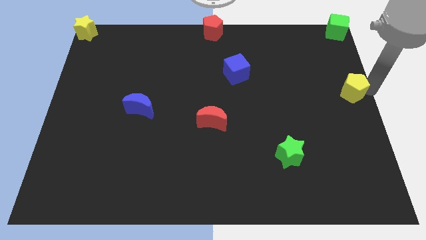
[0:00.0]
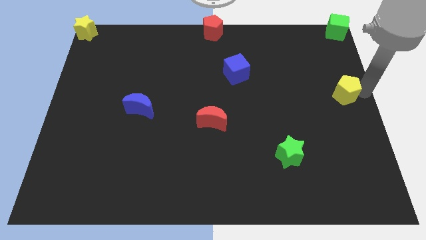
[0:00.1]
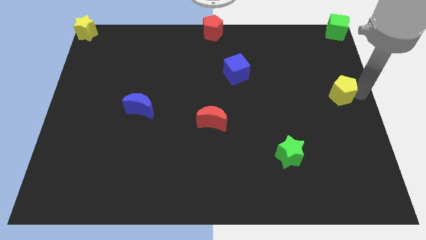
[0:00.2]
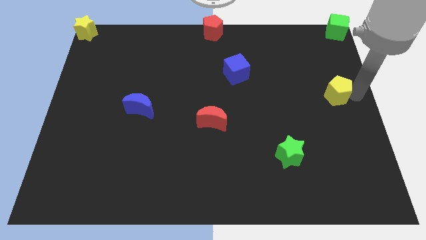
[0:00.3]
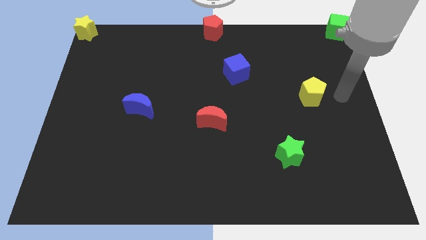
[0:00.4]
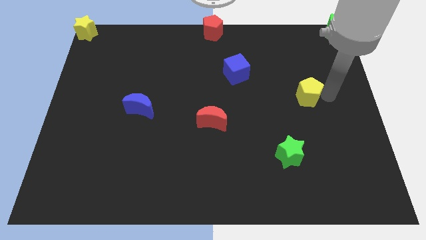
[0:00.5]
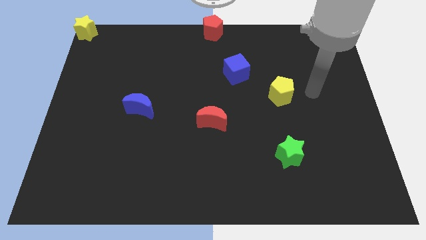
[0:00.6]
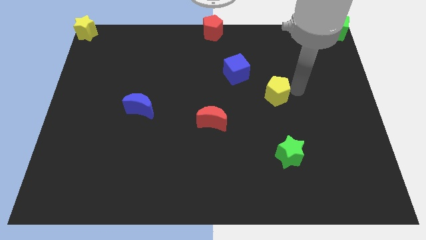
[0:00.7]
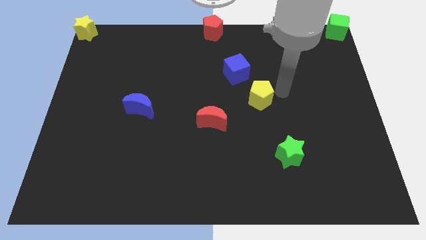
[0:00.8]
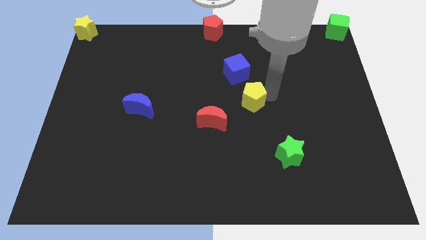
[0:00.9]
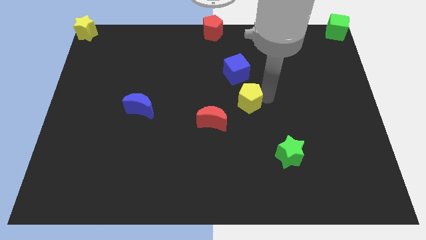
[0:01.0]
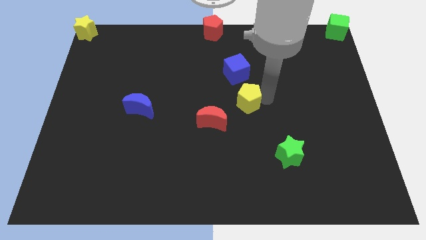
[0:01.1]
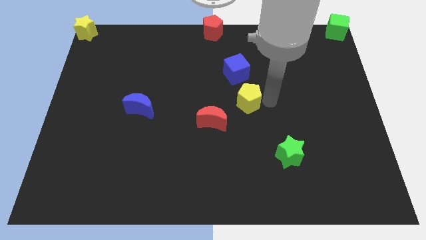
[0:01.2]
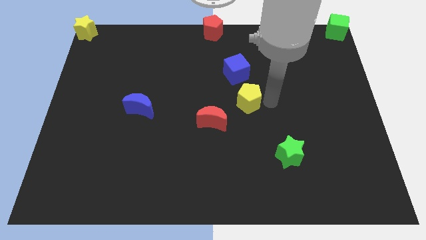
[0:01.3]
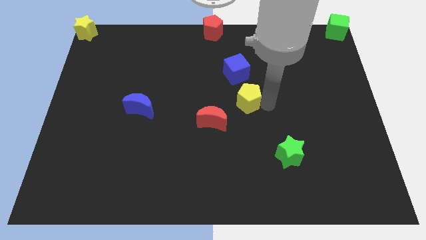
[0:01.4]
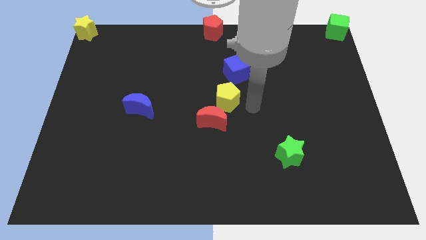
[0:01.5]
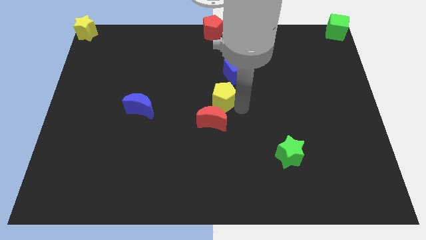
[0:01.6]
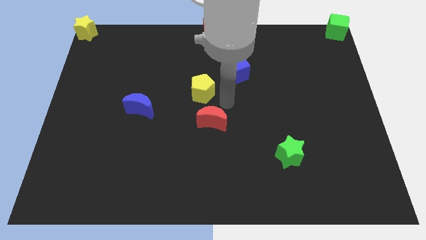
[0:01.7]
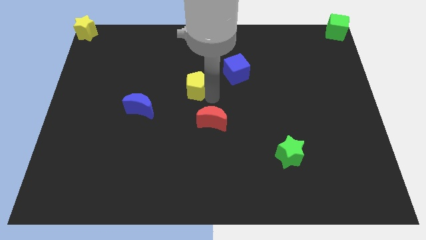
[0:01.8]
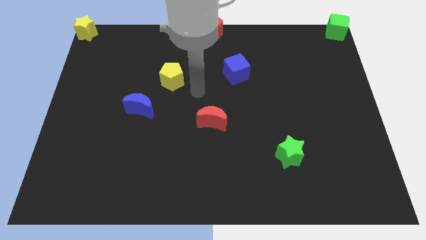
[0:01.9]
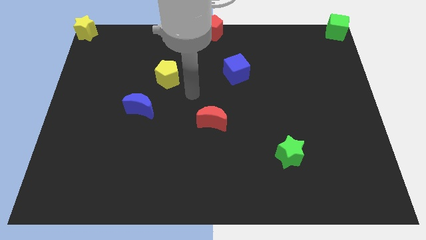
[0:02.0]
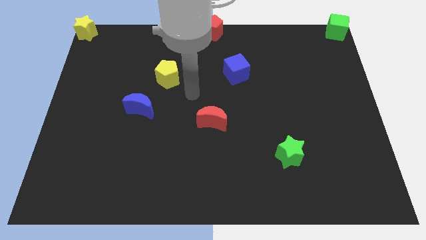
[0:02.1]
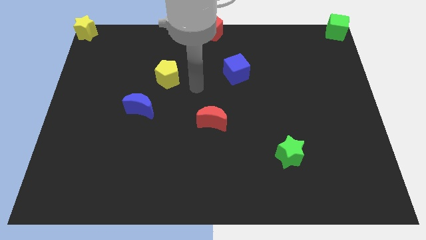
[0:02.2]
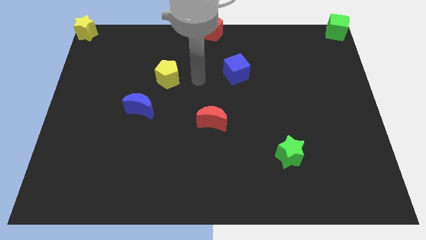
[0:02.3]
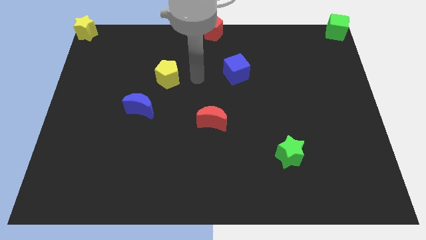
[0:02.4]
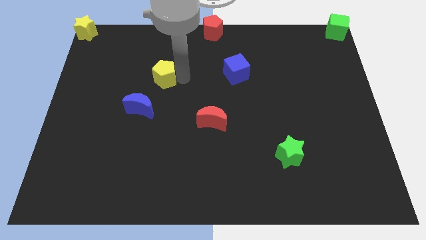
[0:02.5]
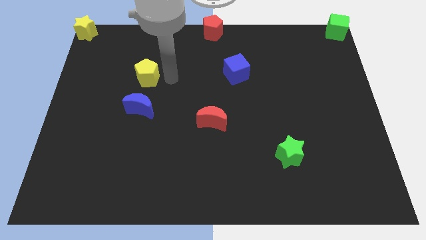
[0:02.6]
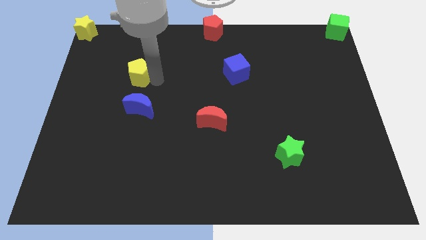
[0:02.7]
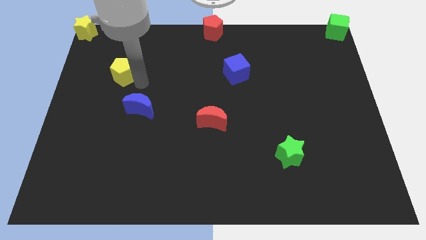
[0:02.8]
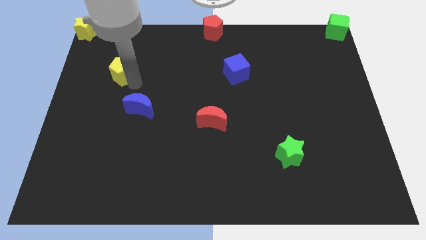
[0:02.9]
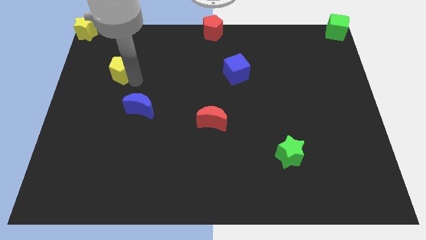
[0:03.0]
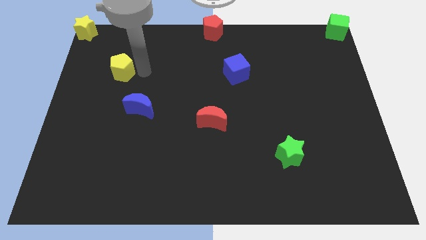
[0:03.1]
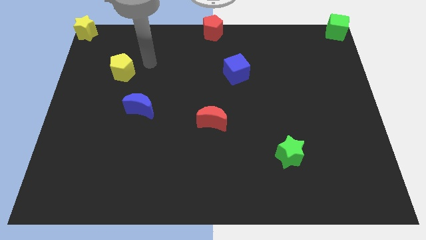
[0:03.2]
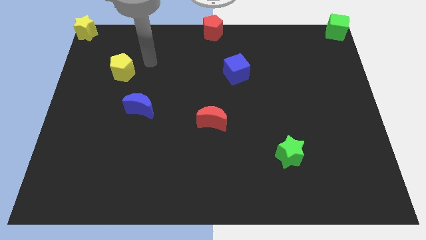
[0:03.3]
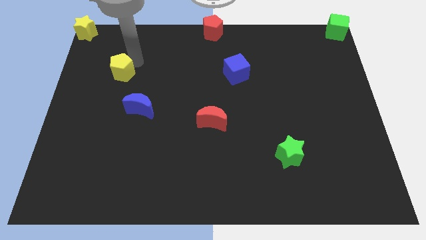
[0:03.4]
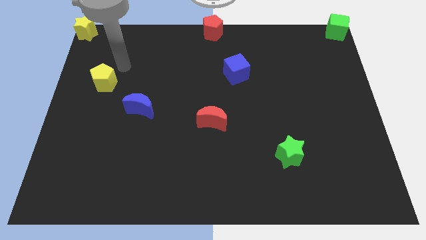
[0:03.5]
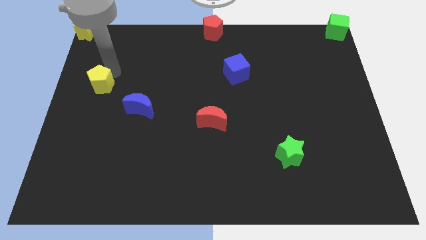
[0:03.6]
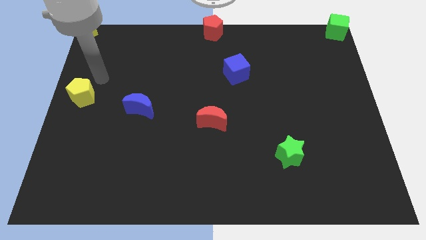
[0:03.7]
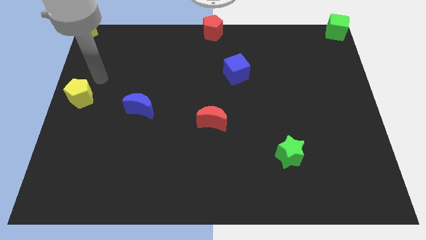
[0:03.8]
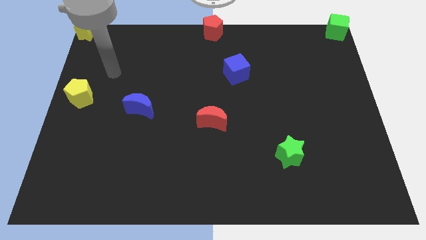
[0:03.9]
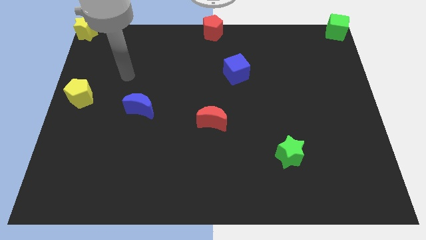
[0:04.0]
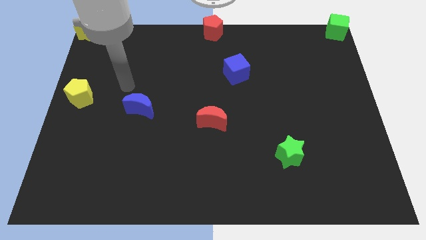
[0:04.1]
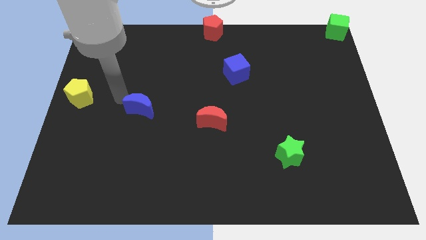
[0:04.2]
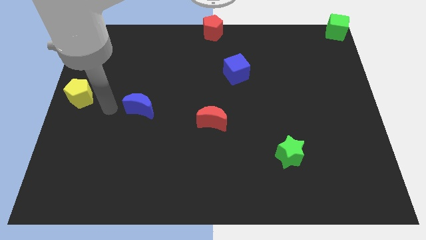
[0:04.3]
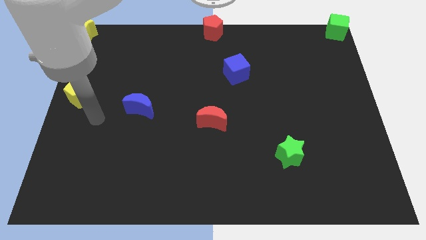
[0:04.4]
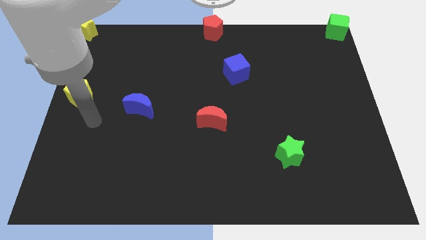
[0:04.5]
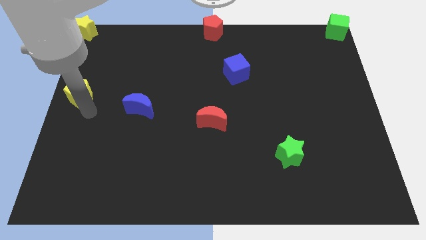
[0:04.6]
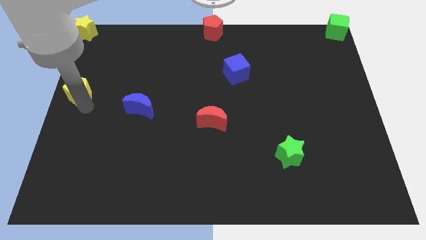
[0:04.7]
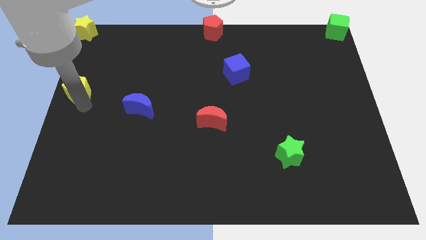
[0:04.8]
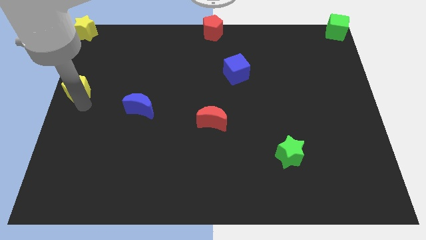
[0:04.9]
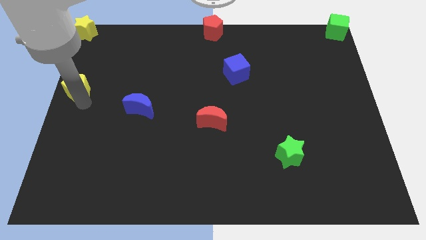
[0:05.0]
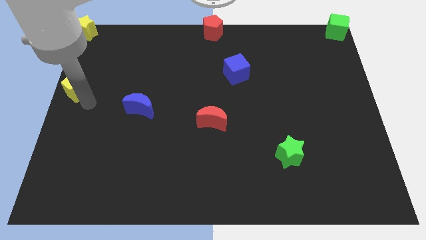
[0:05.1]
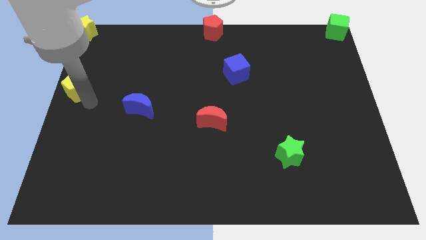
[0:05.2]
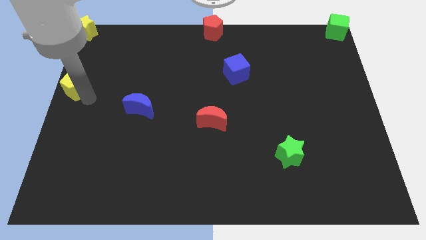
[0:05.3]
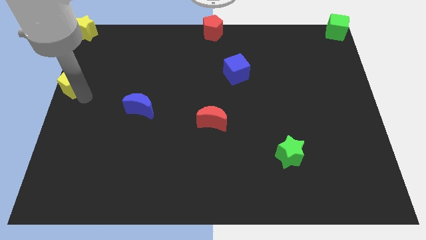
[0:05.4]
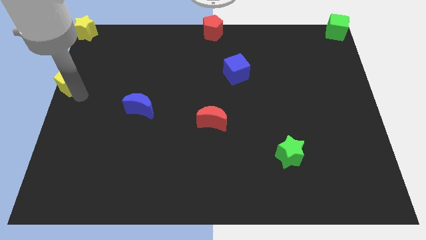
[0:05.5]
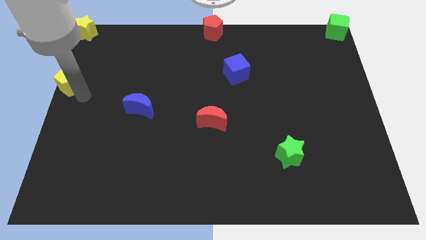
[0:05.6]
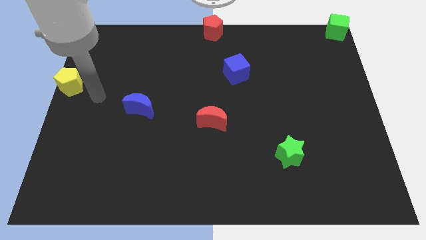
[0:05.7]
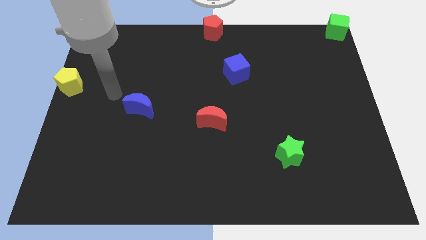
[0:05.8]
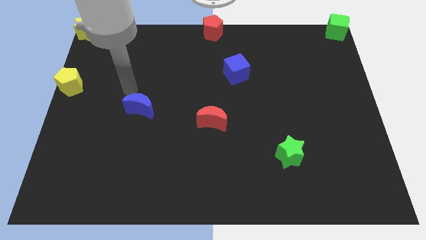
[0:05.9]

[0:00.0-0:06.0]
drag the yellow pentagon to the center left of the board

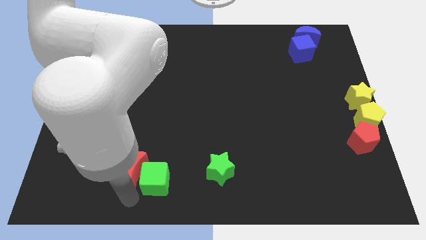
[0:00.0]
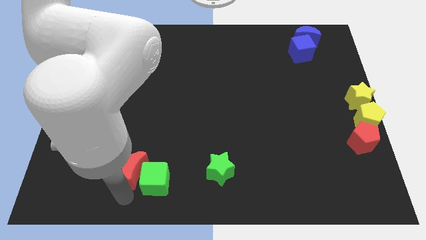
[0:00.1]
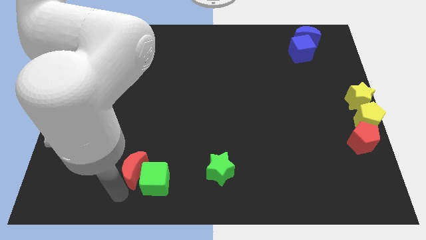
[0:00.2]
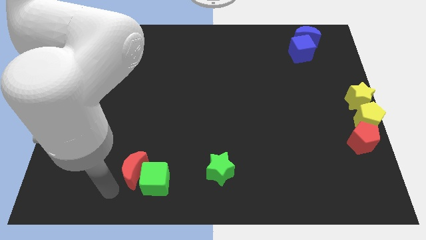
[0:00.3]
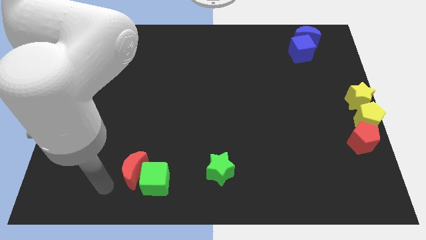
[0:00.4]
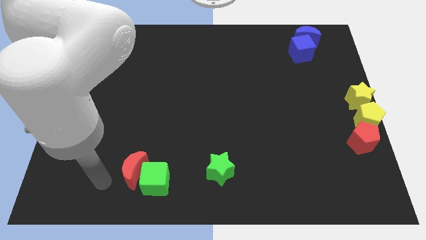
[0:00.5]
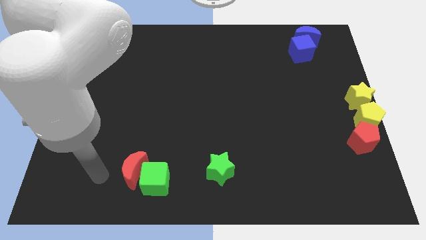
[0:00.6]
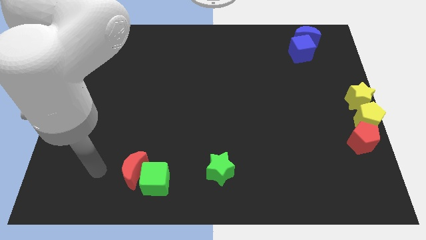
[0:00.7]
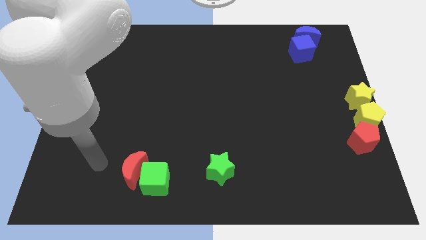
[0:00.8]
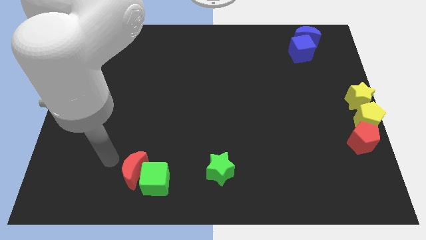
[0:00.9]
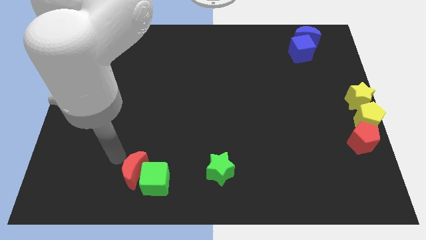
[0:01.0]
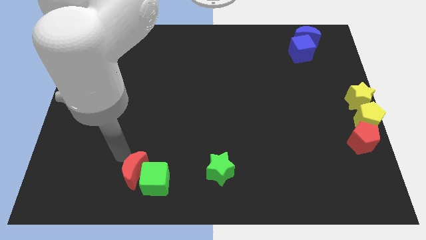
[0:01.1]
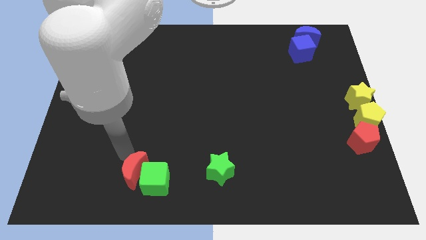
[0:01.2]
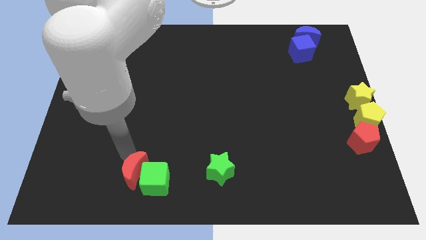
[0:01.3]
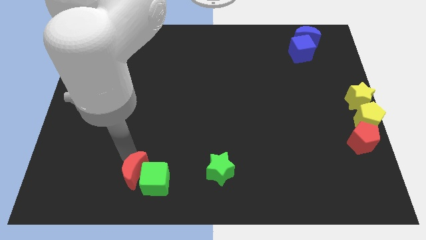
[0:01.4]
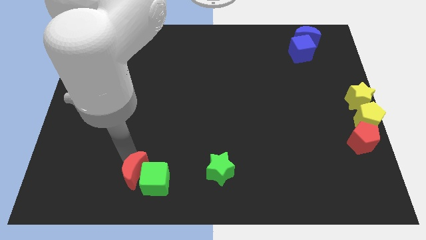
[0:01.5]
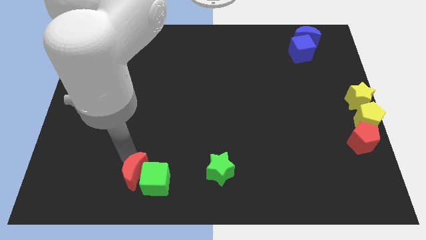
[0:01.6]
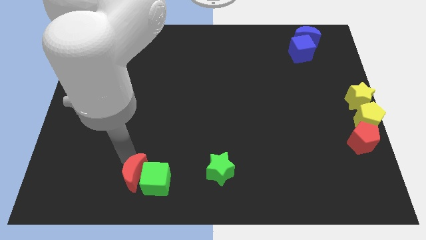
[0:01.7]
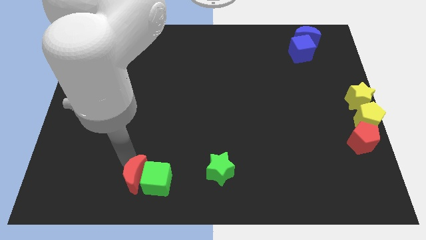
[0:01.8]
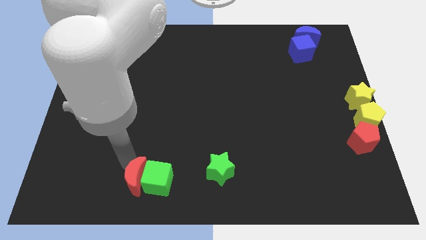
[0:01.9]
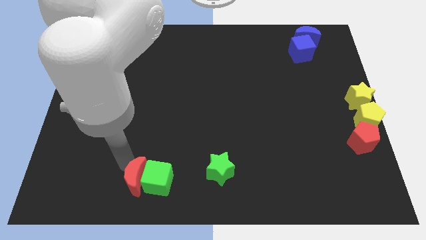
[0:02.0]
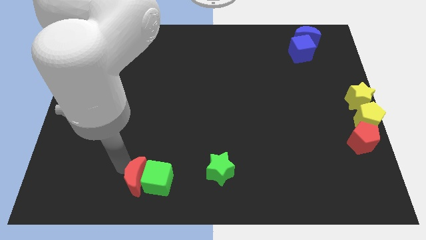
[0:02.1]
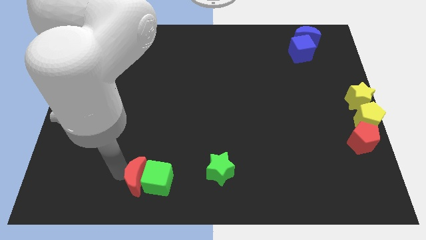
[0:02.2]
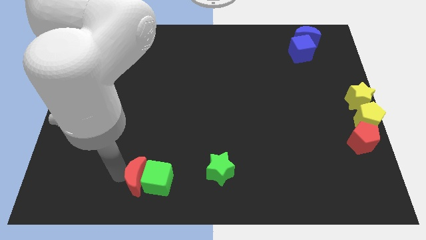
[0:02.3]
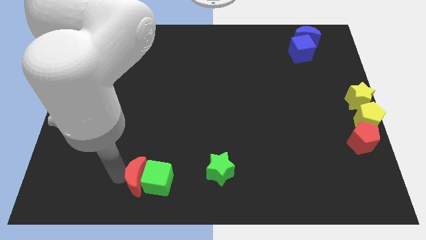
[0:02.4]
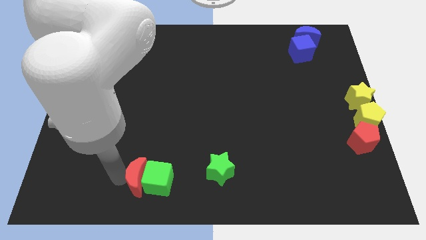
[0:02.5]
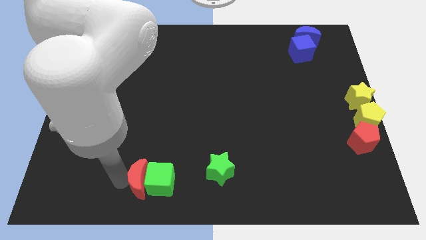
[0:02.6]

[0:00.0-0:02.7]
adjust the red moon and green cube

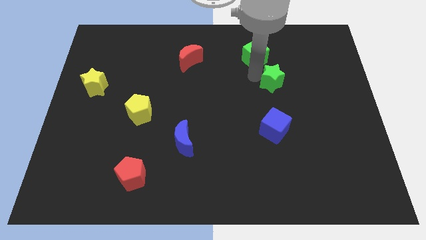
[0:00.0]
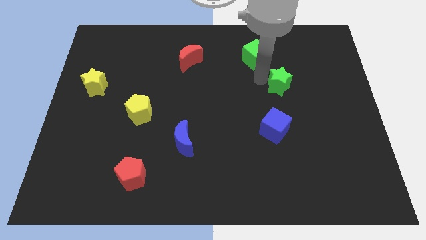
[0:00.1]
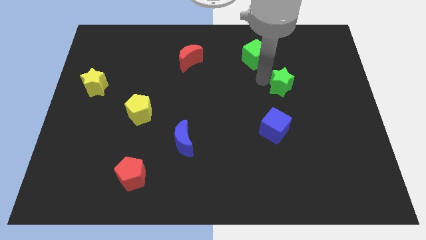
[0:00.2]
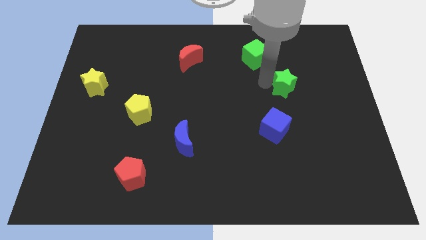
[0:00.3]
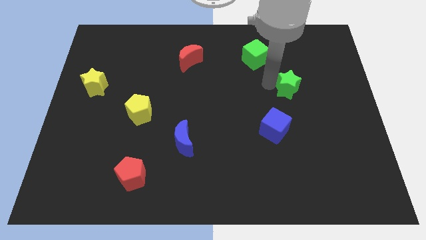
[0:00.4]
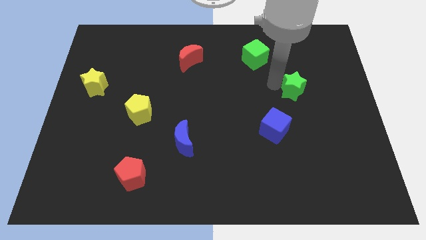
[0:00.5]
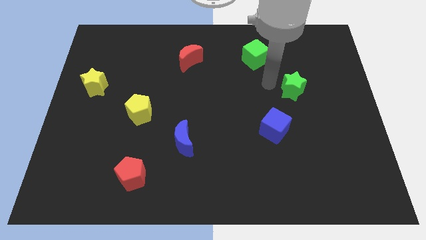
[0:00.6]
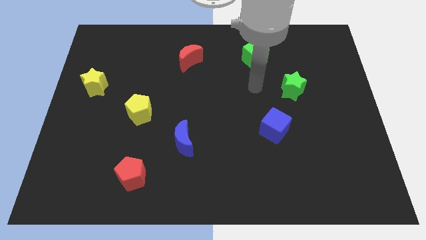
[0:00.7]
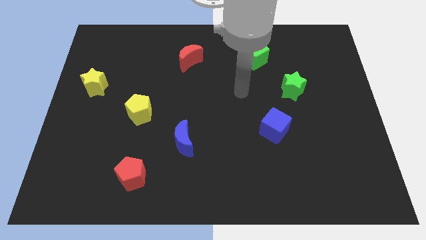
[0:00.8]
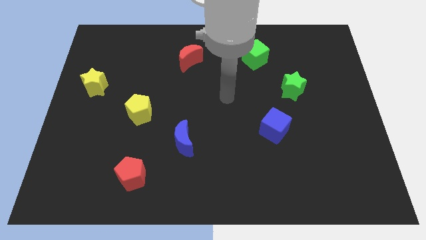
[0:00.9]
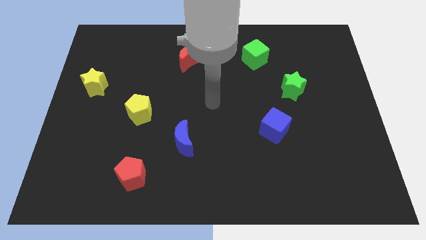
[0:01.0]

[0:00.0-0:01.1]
move the green star to the center right
